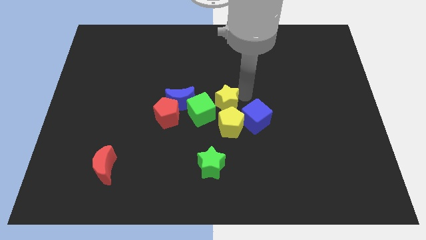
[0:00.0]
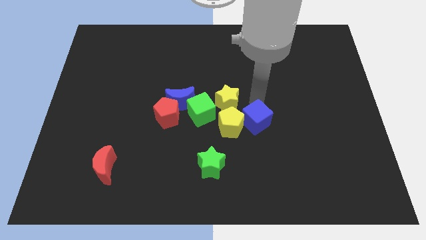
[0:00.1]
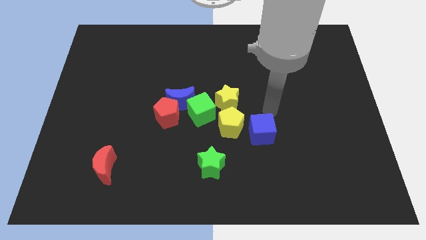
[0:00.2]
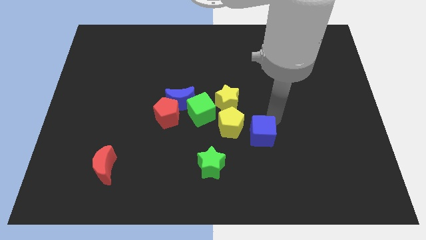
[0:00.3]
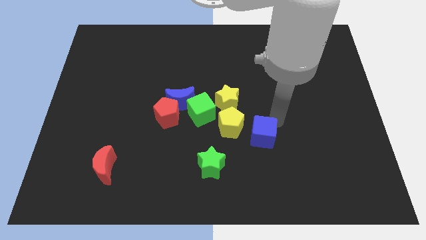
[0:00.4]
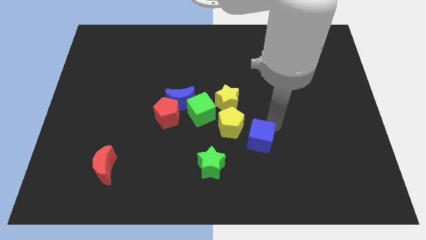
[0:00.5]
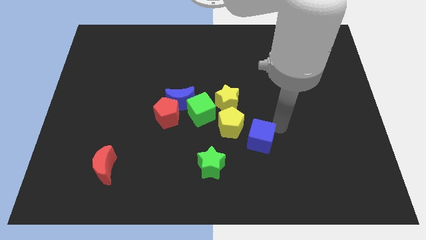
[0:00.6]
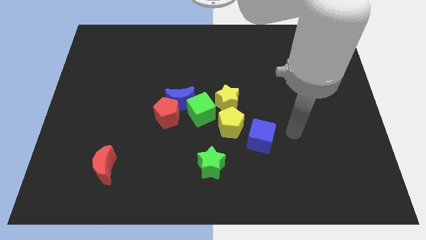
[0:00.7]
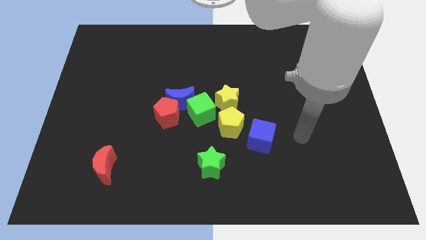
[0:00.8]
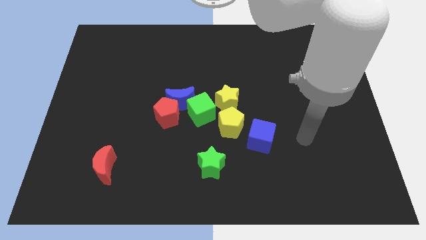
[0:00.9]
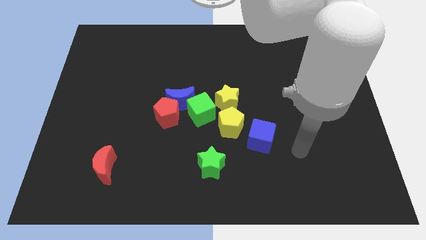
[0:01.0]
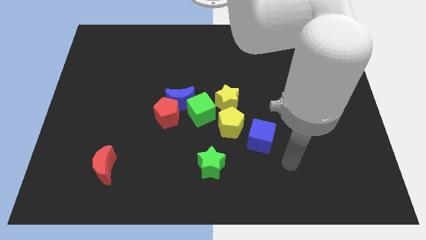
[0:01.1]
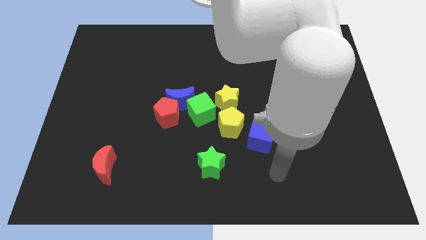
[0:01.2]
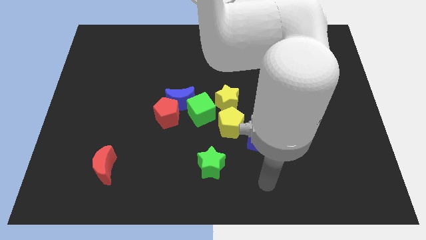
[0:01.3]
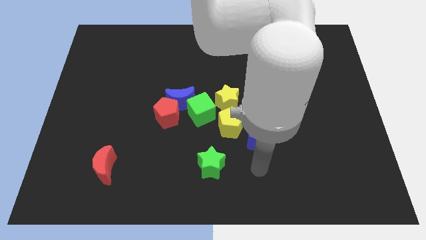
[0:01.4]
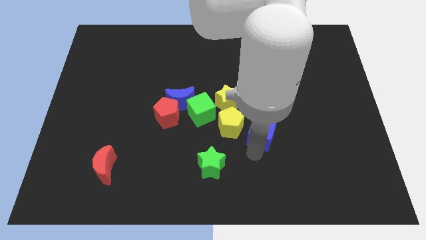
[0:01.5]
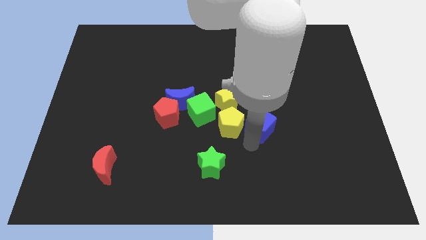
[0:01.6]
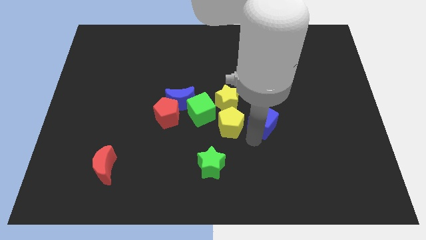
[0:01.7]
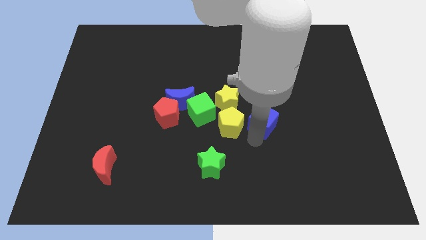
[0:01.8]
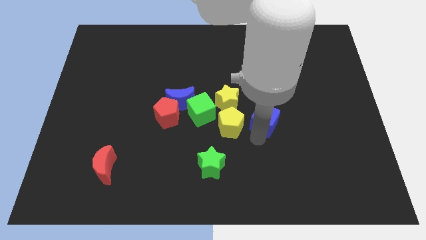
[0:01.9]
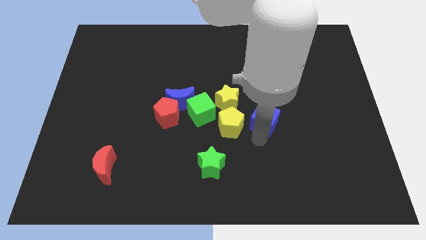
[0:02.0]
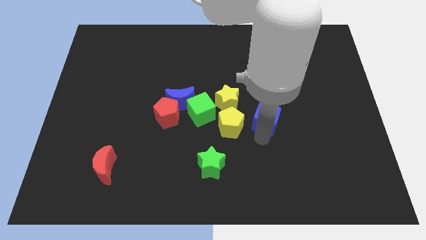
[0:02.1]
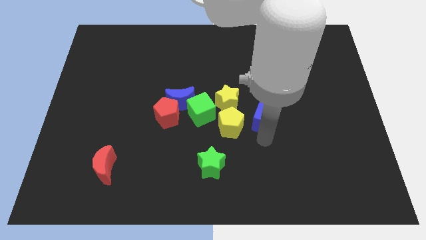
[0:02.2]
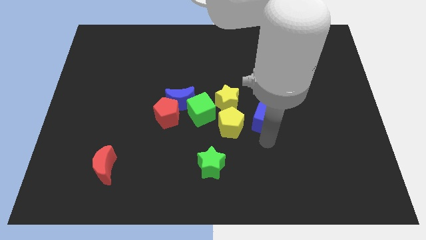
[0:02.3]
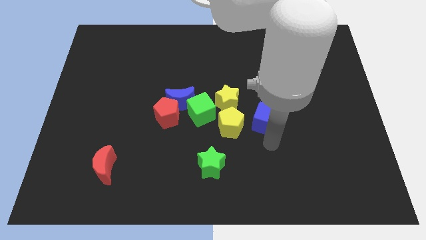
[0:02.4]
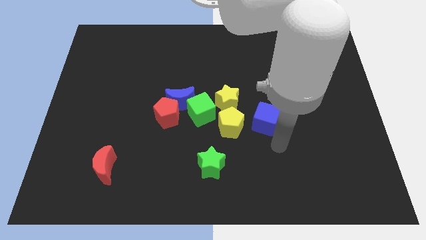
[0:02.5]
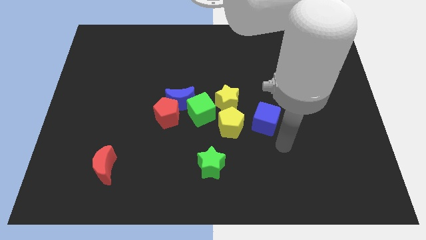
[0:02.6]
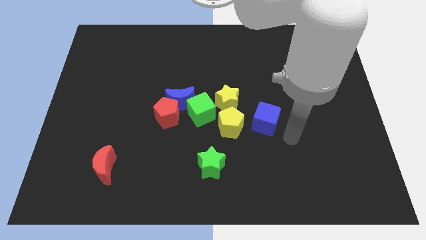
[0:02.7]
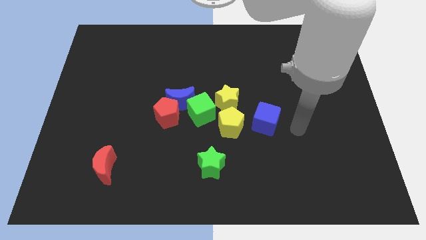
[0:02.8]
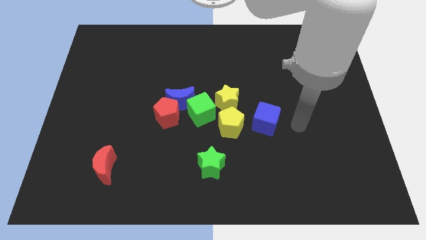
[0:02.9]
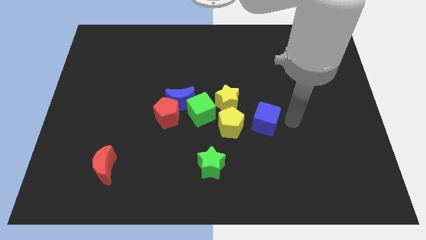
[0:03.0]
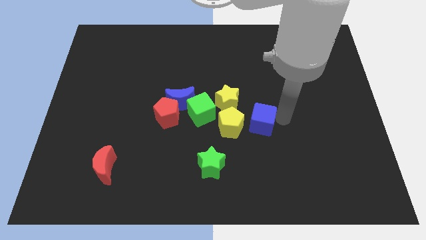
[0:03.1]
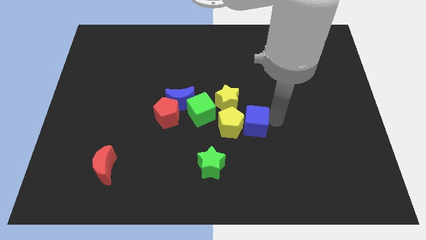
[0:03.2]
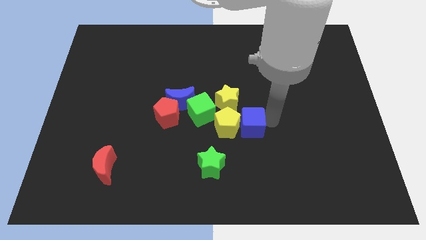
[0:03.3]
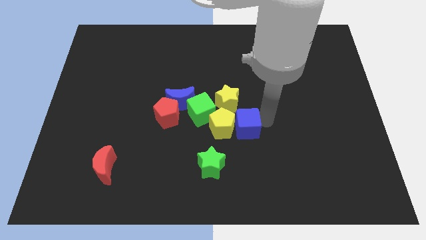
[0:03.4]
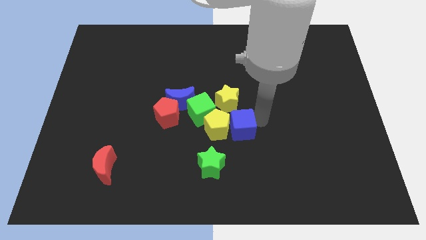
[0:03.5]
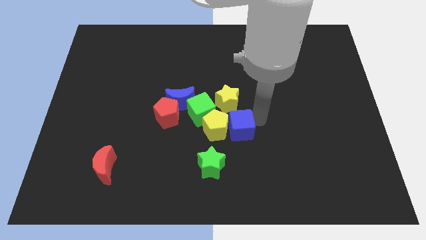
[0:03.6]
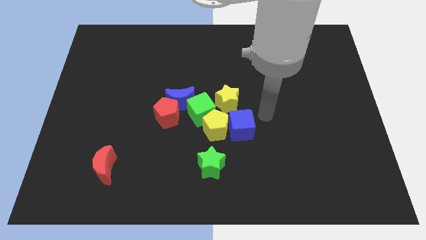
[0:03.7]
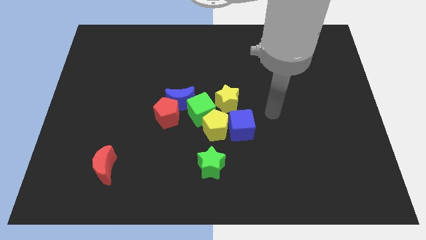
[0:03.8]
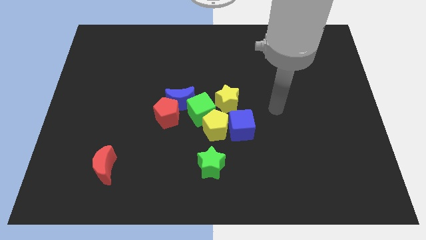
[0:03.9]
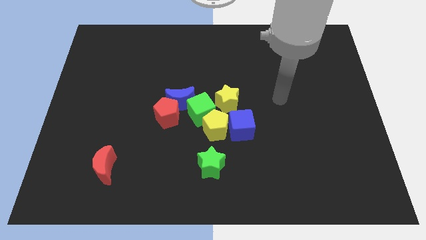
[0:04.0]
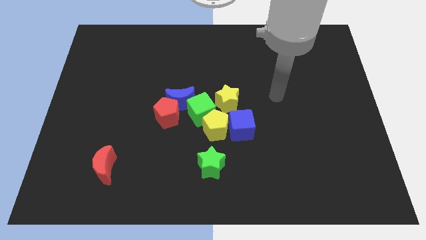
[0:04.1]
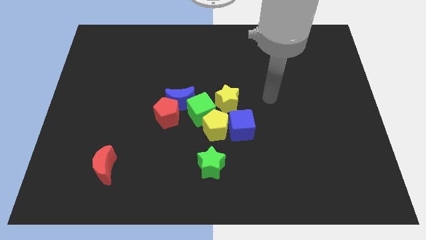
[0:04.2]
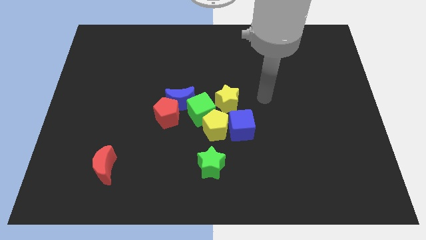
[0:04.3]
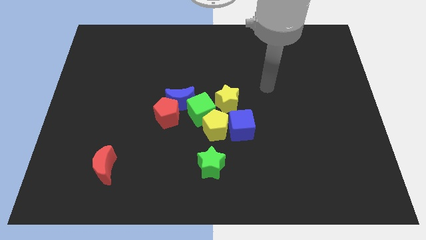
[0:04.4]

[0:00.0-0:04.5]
push the blue cube into the yellow pentagon

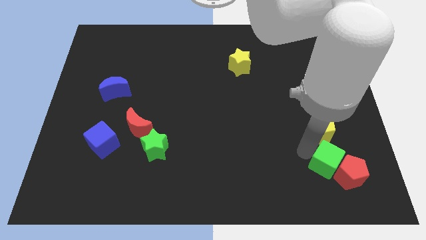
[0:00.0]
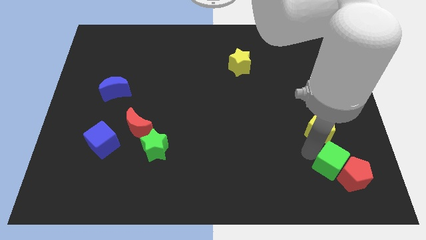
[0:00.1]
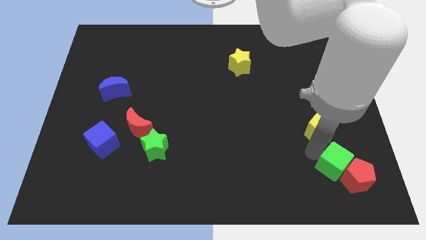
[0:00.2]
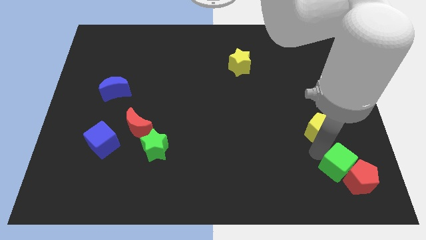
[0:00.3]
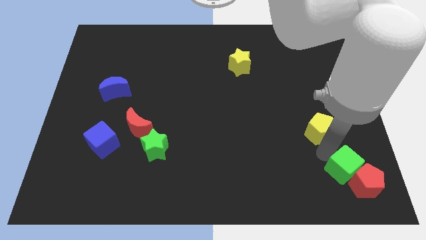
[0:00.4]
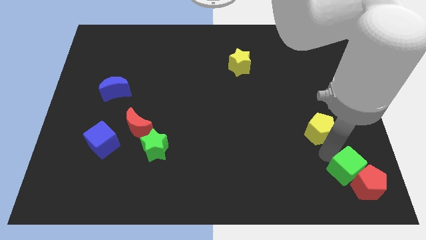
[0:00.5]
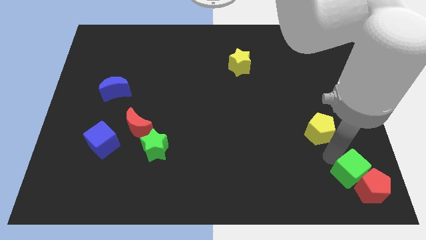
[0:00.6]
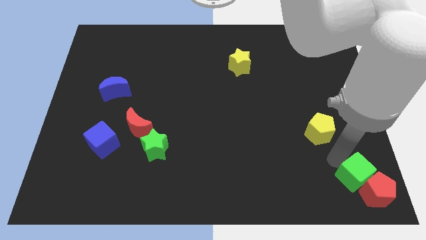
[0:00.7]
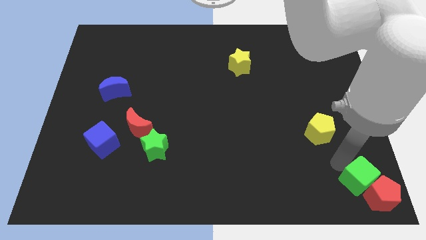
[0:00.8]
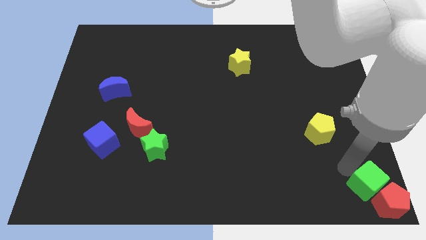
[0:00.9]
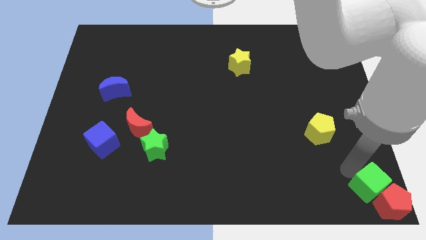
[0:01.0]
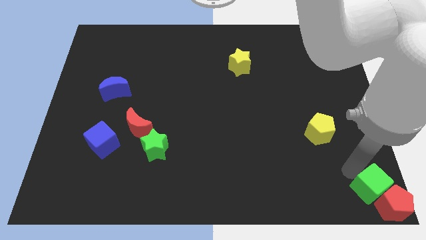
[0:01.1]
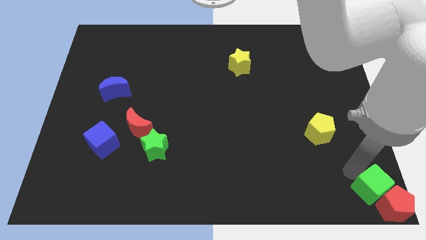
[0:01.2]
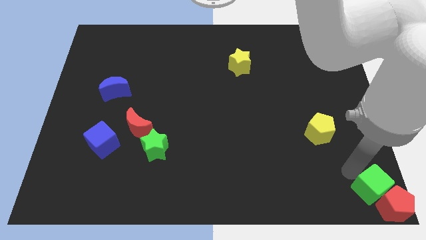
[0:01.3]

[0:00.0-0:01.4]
move the green cube to the right bottom along with the red pentagon

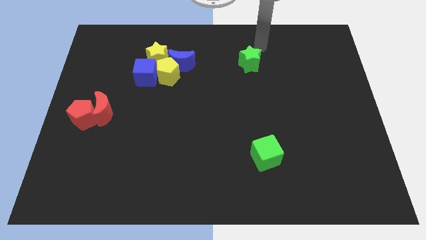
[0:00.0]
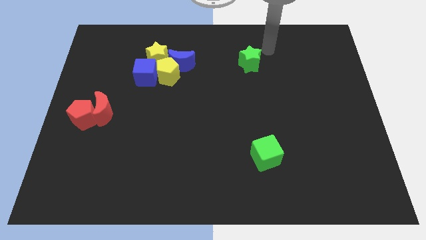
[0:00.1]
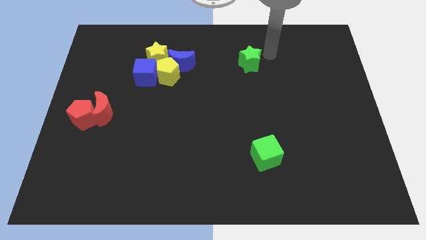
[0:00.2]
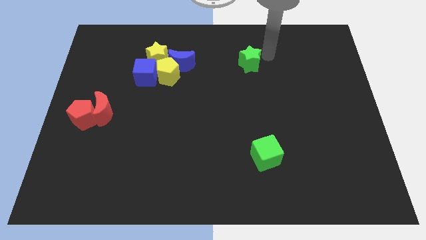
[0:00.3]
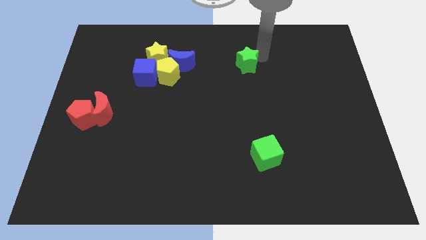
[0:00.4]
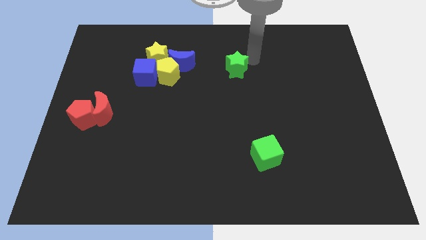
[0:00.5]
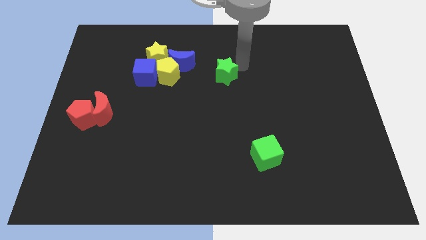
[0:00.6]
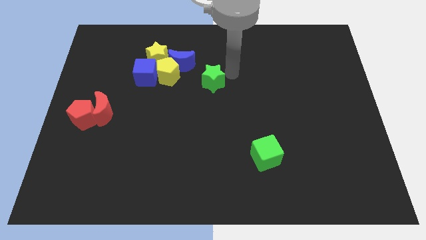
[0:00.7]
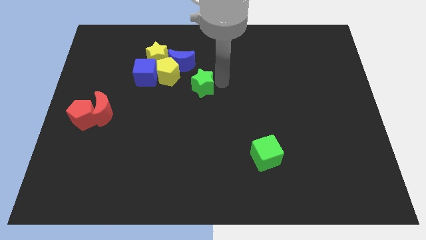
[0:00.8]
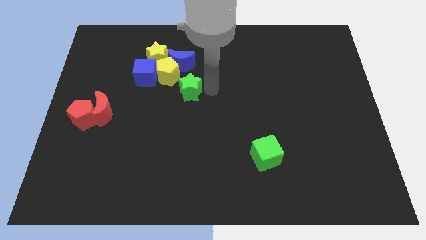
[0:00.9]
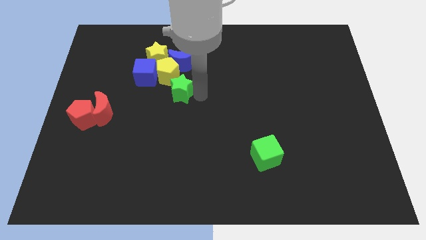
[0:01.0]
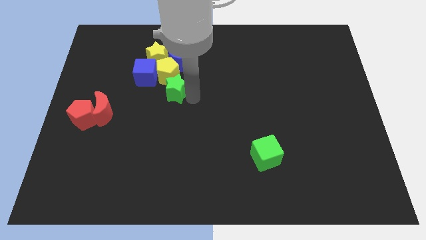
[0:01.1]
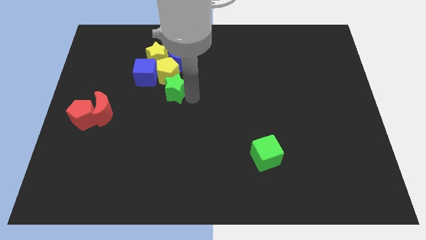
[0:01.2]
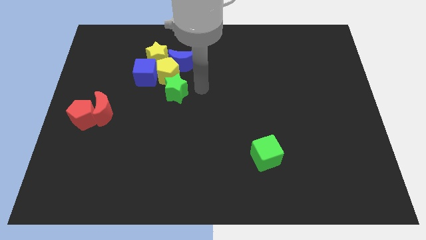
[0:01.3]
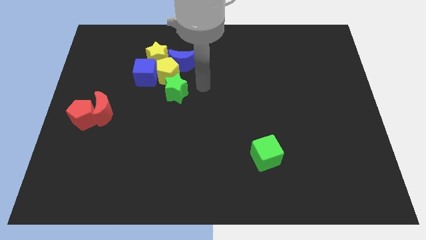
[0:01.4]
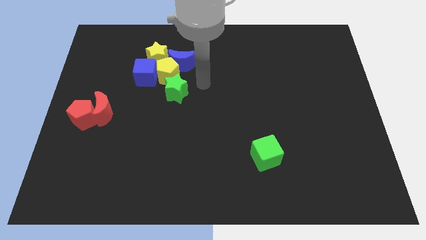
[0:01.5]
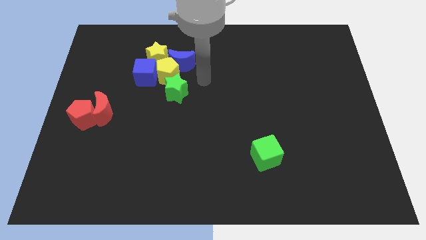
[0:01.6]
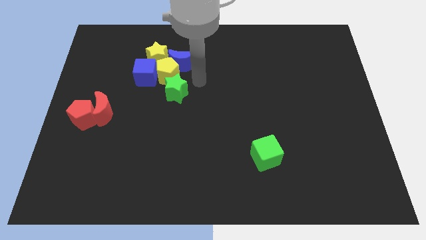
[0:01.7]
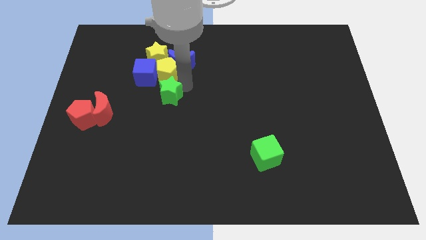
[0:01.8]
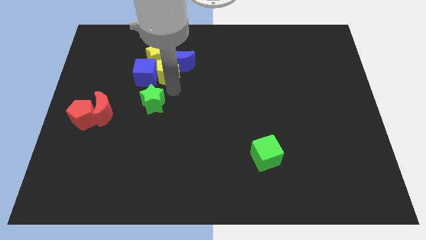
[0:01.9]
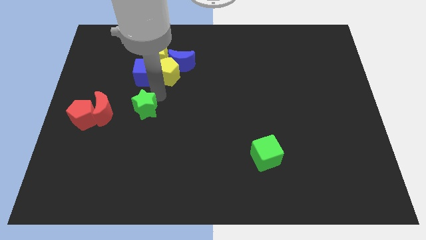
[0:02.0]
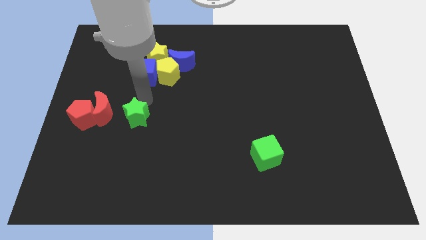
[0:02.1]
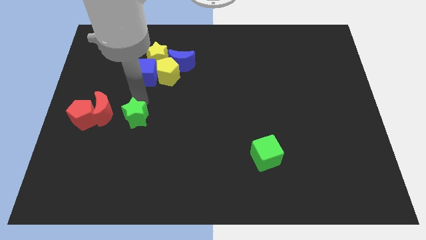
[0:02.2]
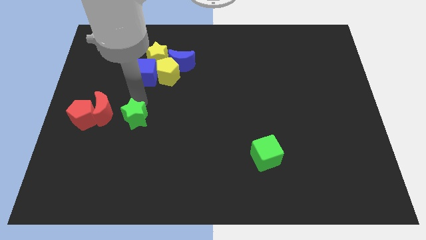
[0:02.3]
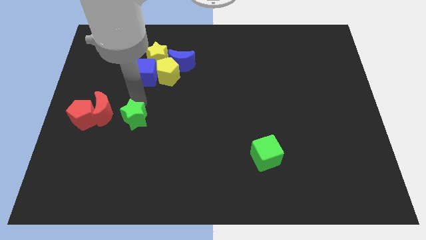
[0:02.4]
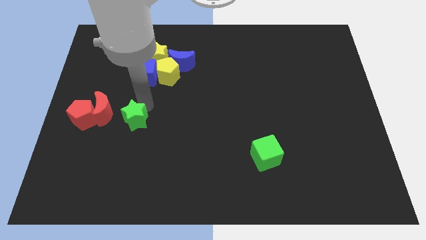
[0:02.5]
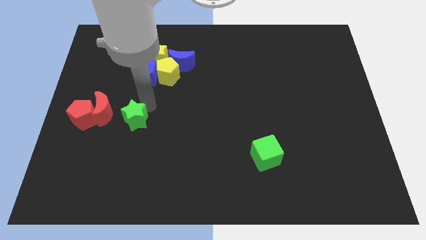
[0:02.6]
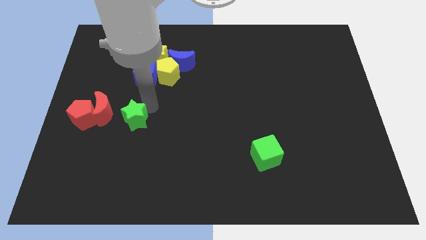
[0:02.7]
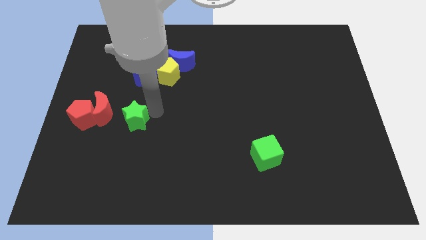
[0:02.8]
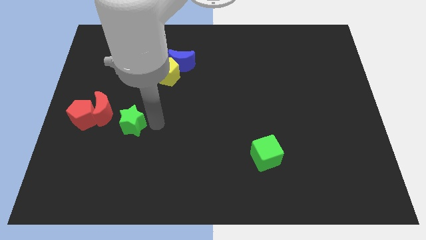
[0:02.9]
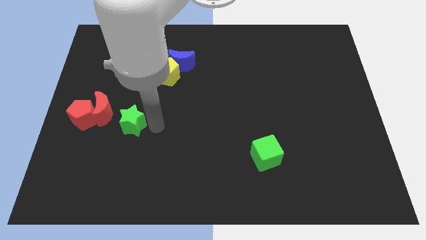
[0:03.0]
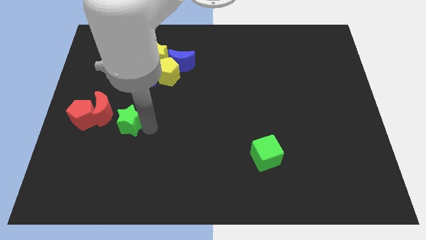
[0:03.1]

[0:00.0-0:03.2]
move the green star to the left center of the board
